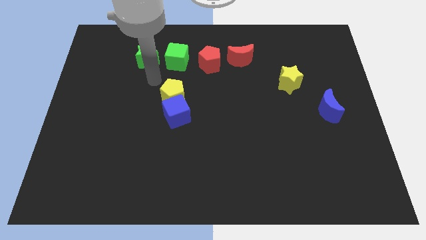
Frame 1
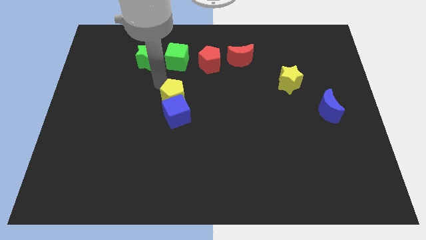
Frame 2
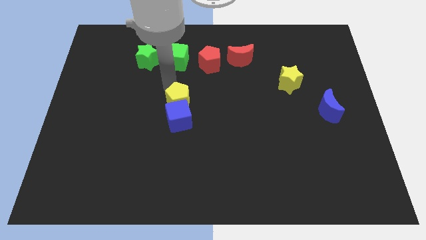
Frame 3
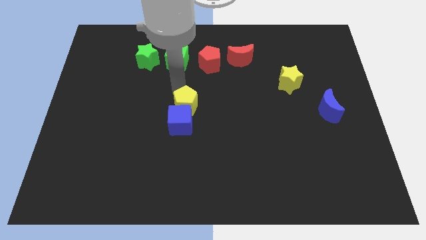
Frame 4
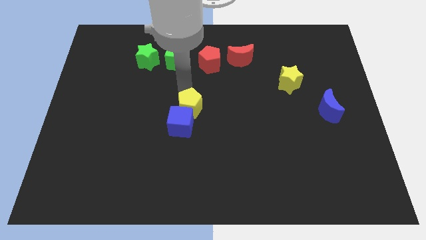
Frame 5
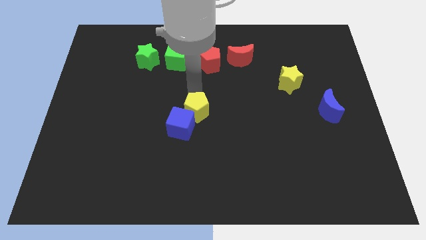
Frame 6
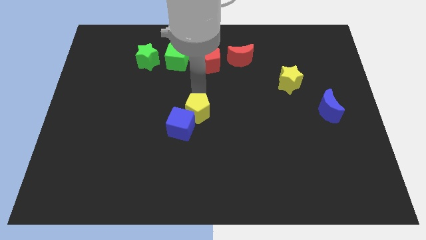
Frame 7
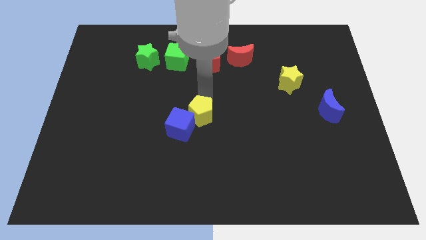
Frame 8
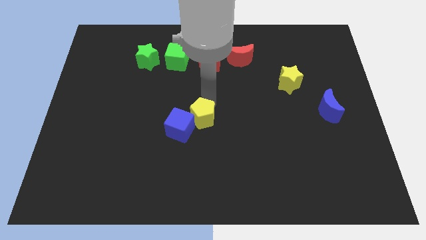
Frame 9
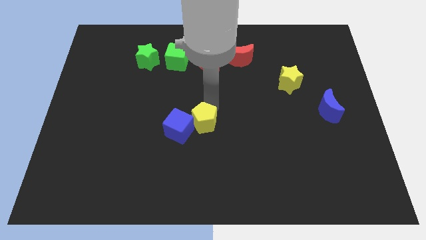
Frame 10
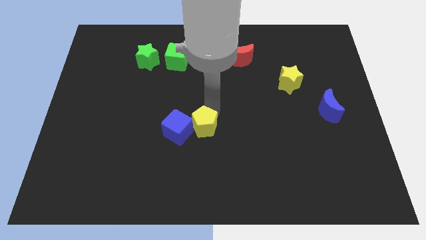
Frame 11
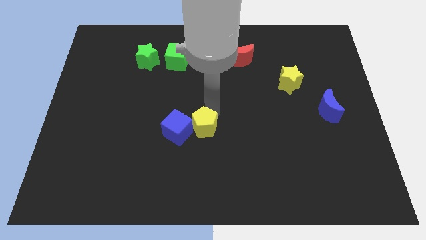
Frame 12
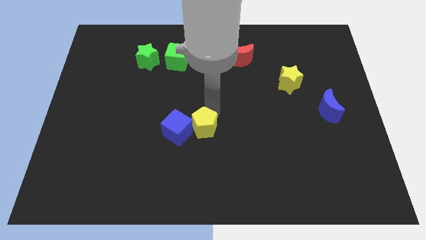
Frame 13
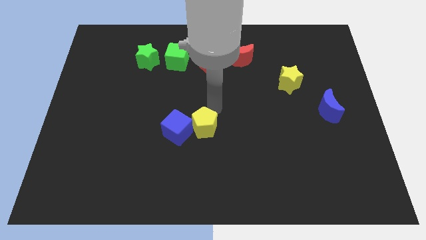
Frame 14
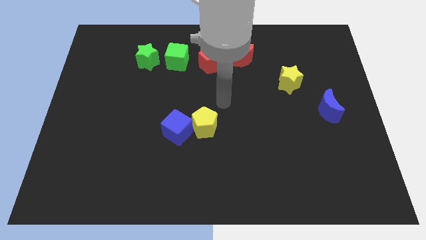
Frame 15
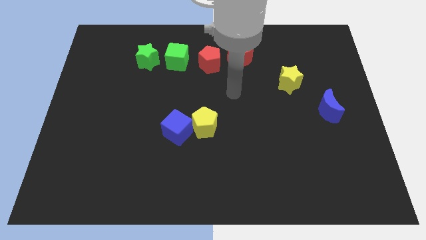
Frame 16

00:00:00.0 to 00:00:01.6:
place yellow pentagon to the center of the board

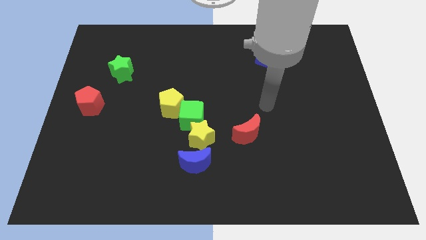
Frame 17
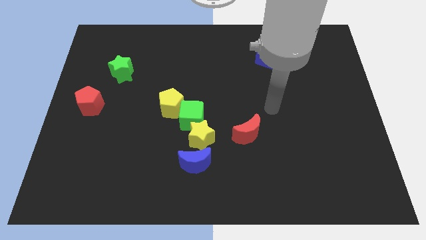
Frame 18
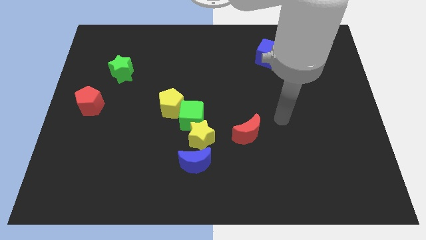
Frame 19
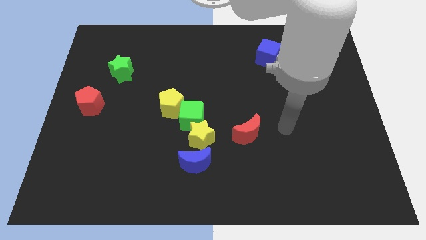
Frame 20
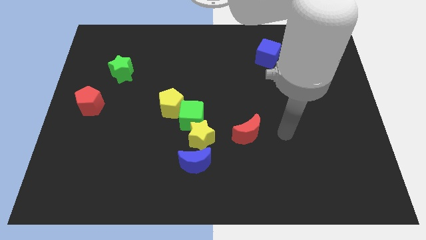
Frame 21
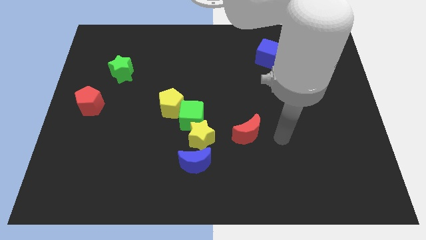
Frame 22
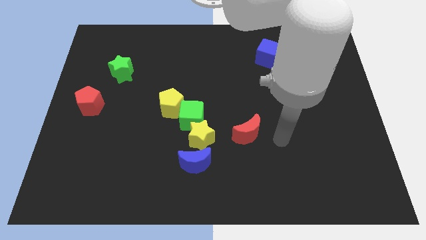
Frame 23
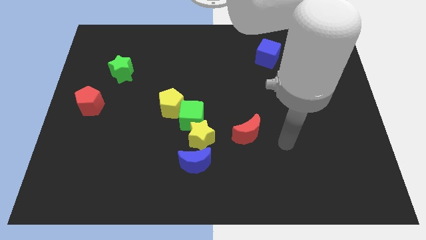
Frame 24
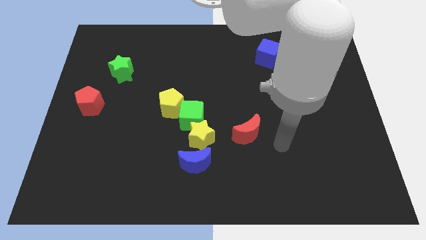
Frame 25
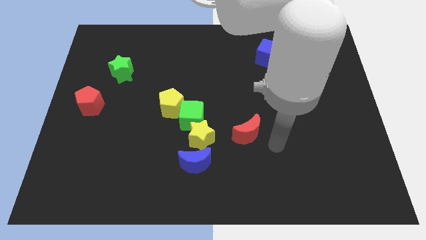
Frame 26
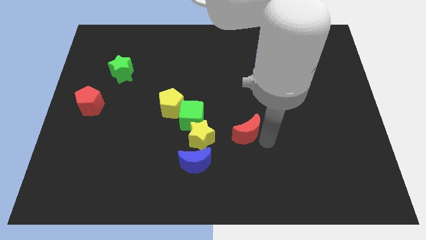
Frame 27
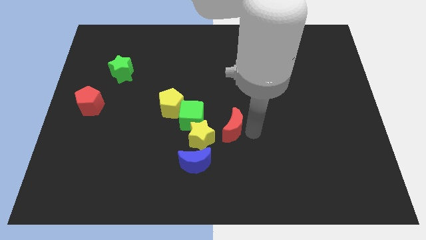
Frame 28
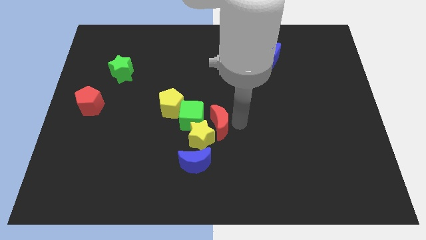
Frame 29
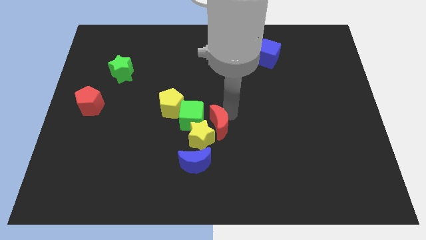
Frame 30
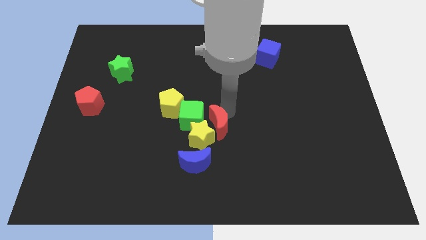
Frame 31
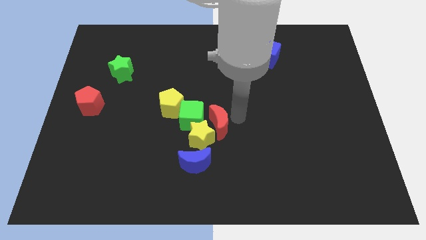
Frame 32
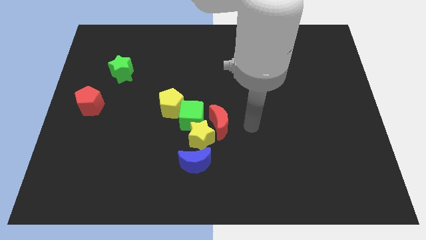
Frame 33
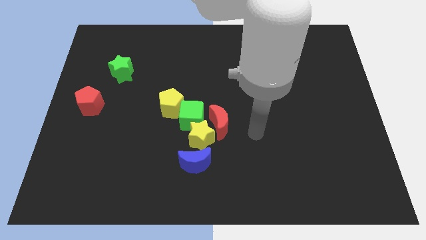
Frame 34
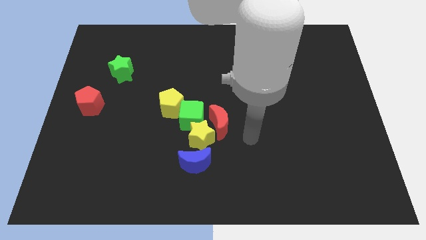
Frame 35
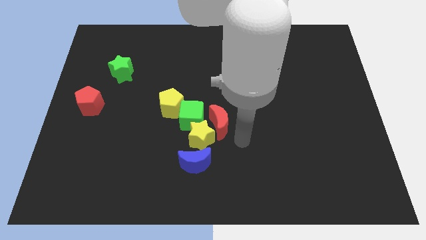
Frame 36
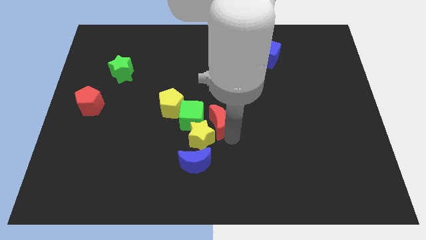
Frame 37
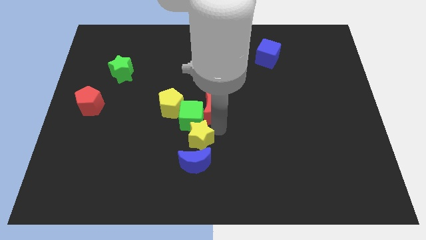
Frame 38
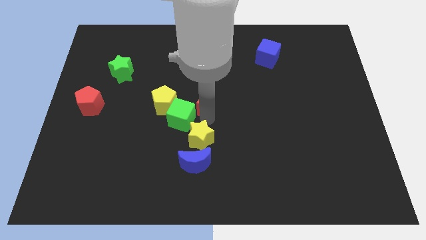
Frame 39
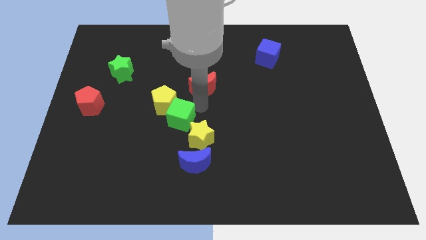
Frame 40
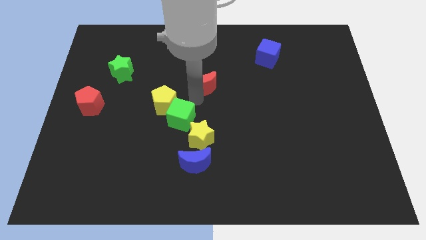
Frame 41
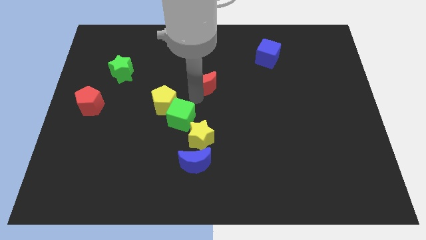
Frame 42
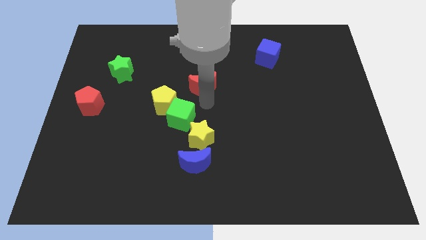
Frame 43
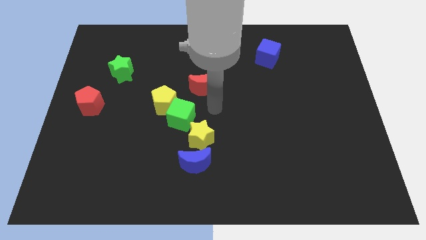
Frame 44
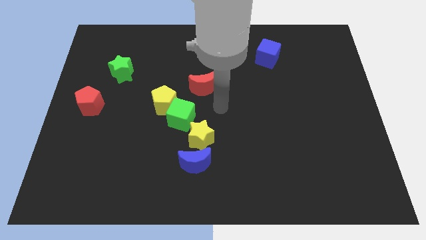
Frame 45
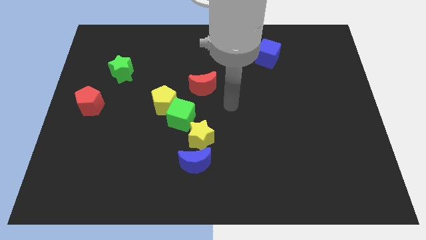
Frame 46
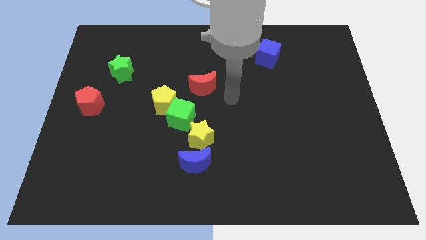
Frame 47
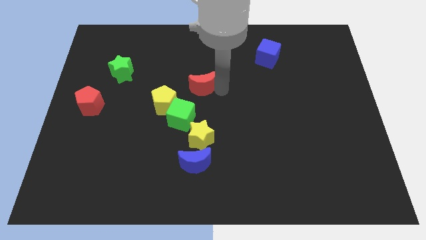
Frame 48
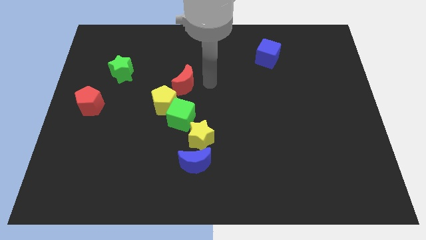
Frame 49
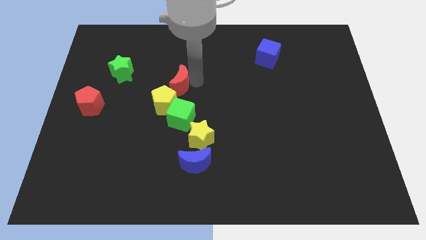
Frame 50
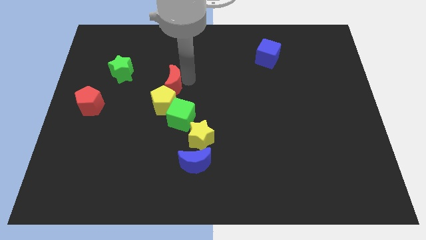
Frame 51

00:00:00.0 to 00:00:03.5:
place the red moon above yellow pentagon

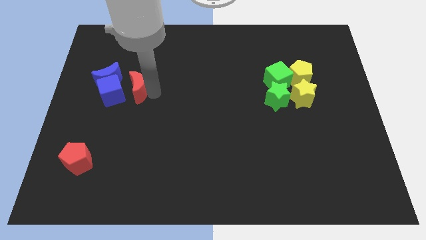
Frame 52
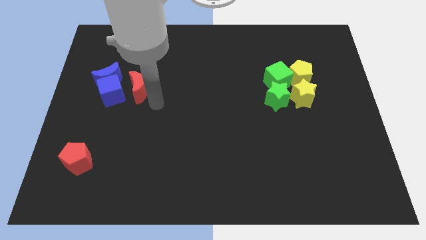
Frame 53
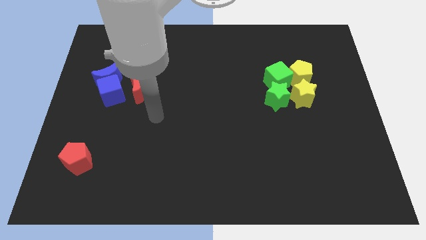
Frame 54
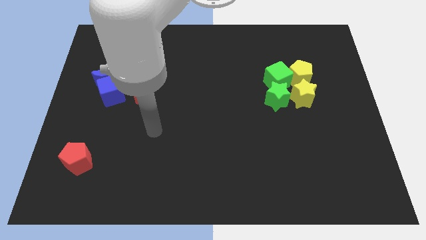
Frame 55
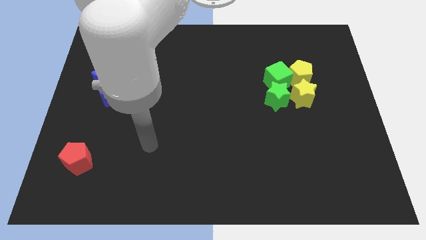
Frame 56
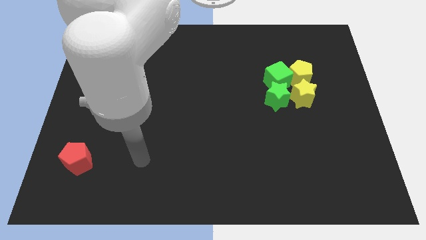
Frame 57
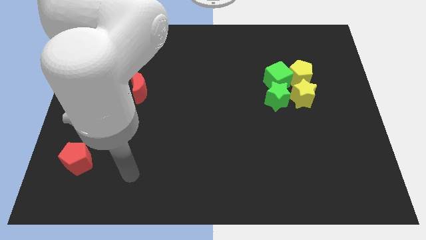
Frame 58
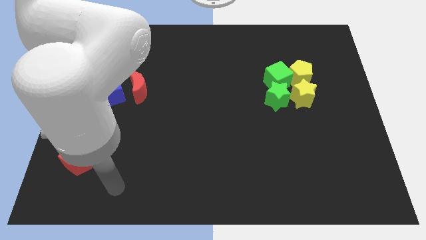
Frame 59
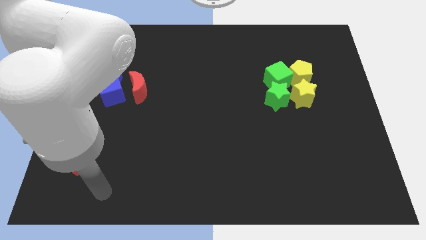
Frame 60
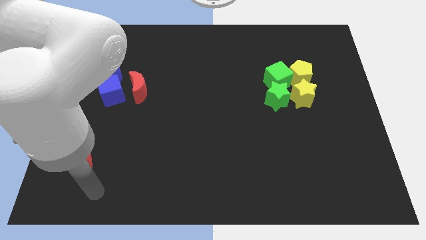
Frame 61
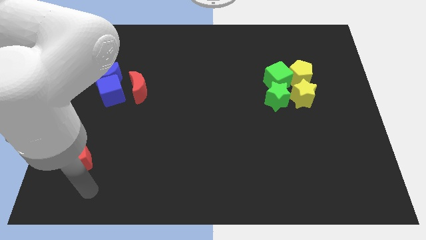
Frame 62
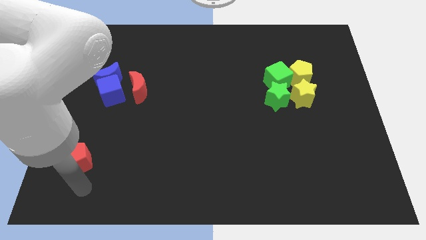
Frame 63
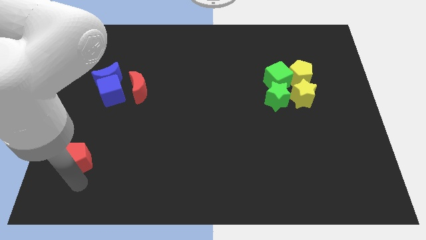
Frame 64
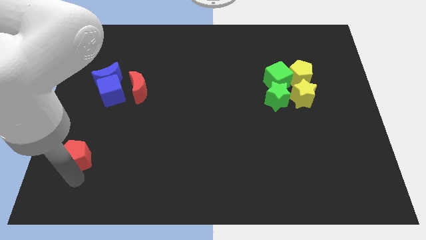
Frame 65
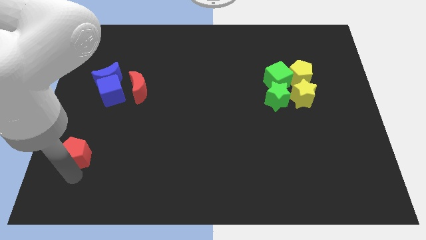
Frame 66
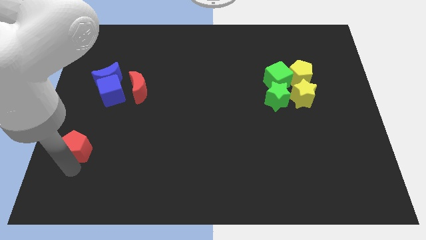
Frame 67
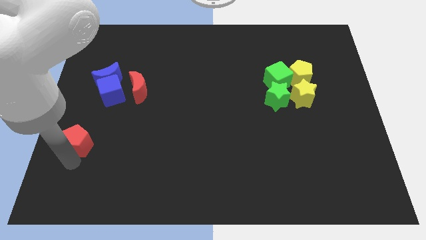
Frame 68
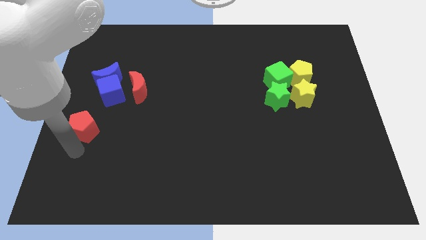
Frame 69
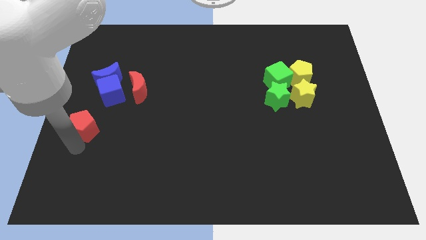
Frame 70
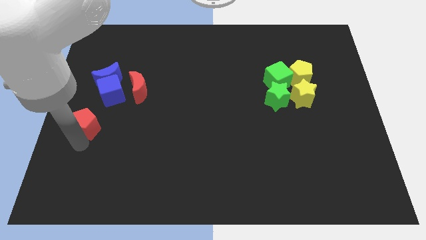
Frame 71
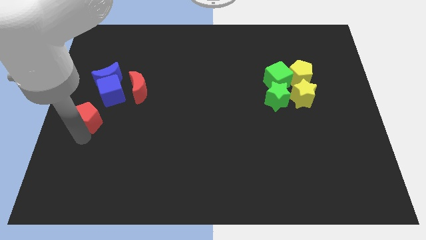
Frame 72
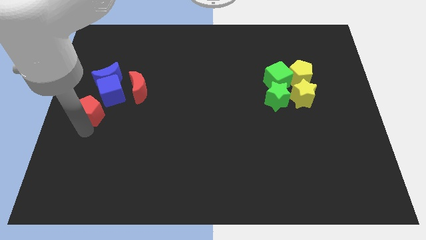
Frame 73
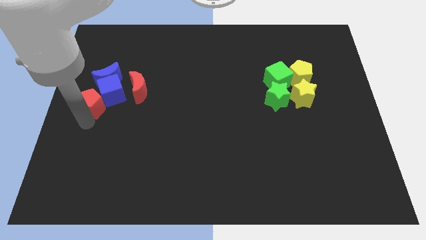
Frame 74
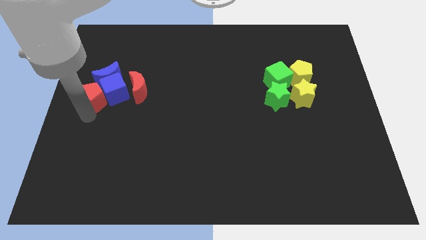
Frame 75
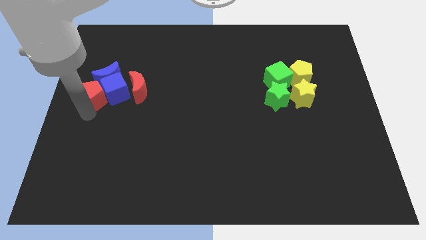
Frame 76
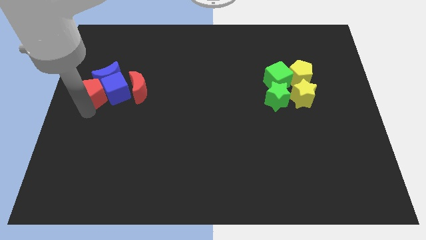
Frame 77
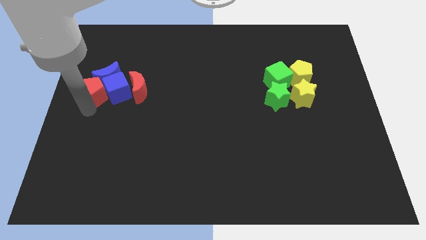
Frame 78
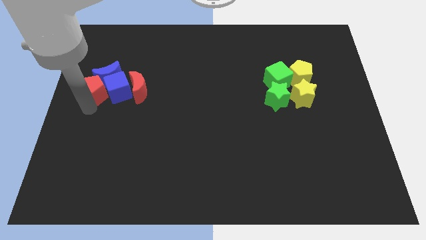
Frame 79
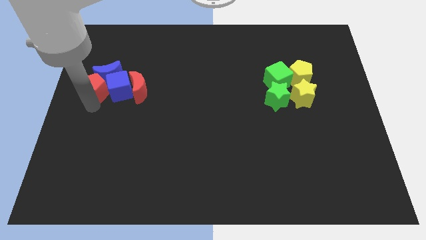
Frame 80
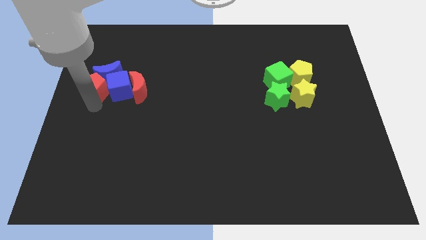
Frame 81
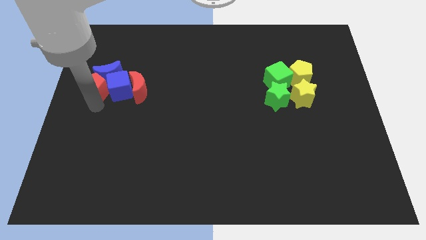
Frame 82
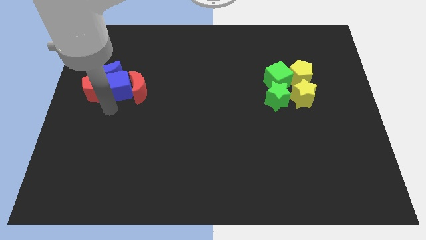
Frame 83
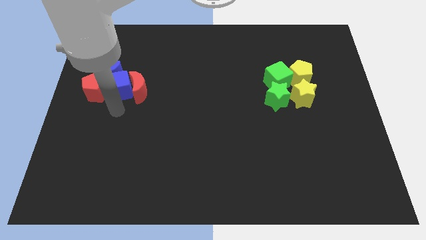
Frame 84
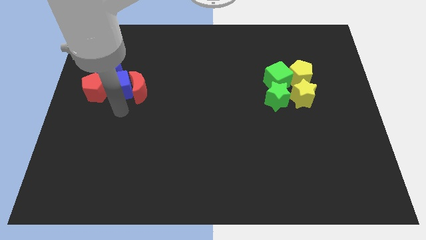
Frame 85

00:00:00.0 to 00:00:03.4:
push the red pentagon into the blue cube

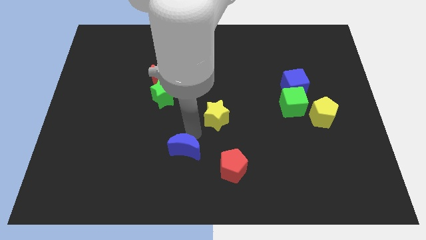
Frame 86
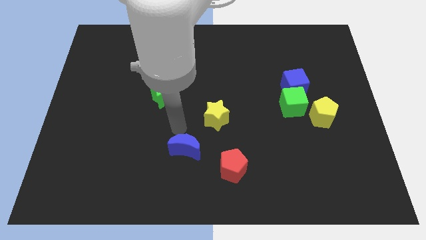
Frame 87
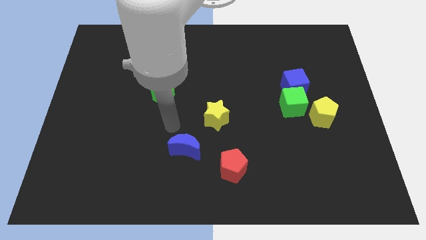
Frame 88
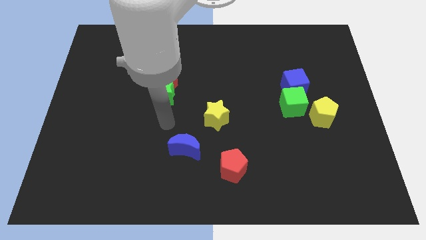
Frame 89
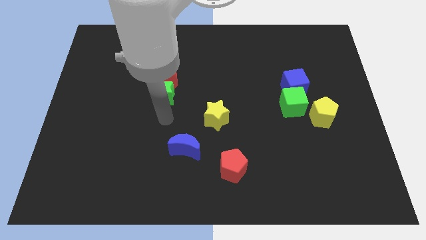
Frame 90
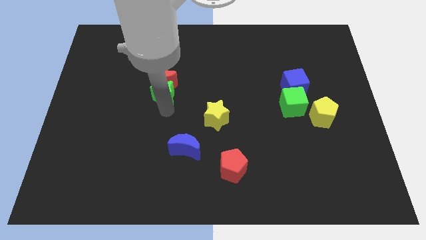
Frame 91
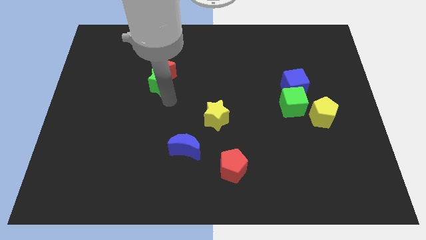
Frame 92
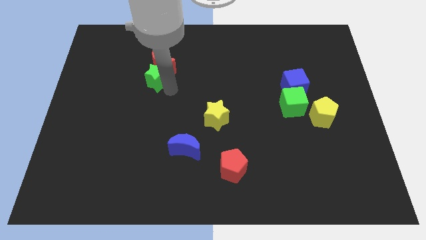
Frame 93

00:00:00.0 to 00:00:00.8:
touch the bottom of green star
